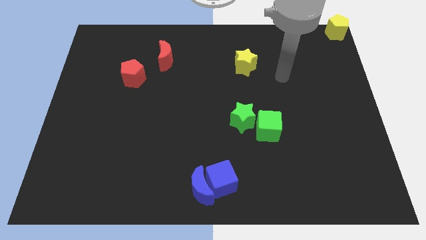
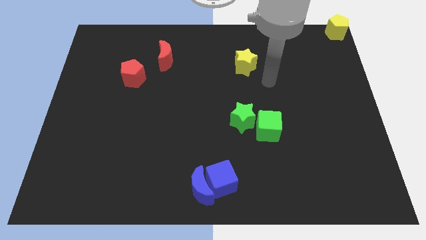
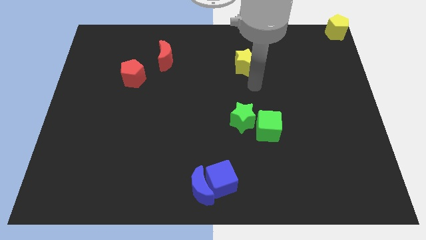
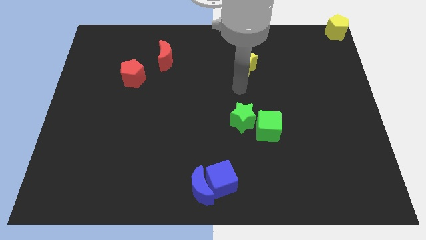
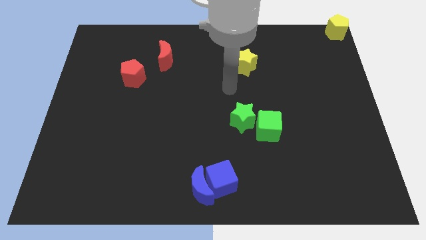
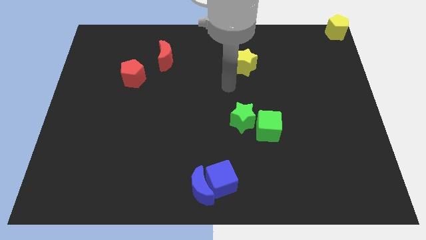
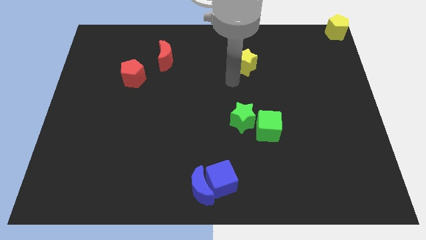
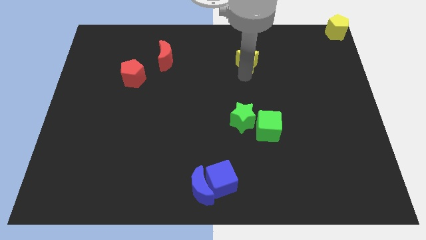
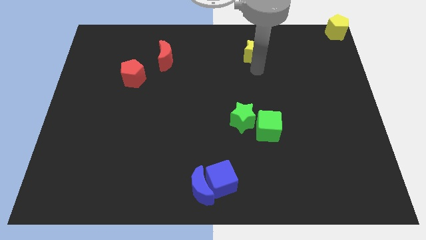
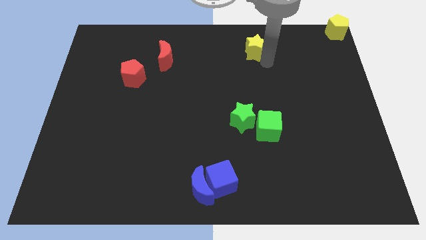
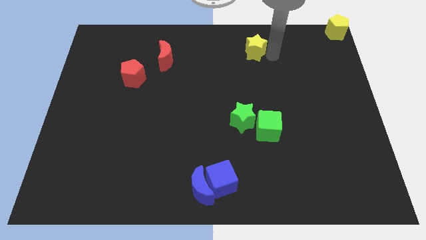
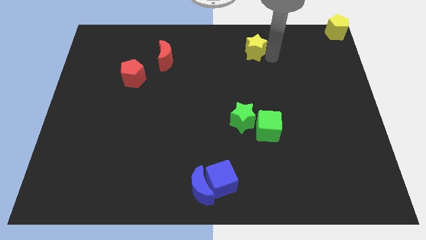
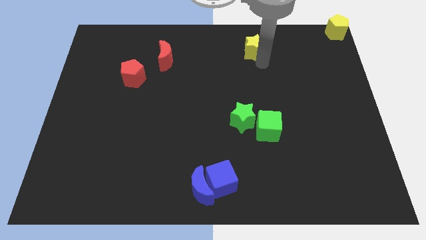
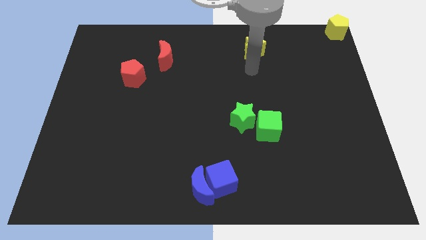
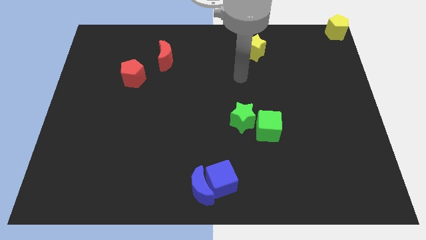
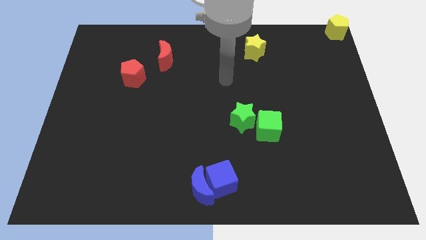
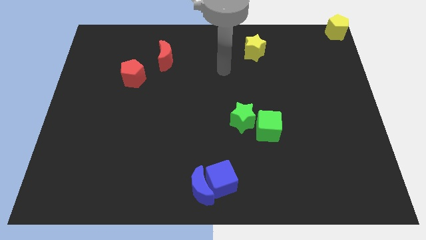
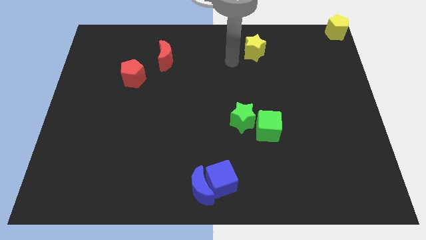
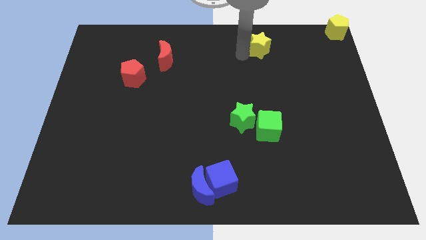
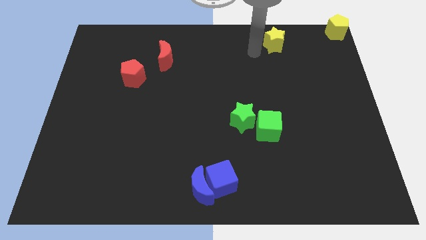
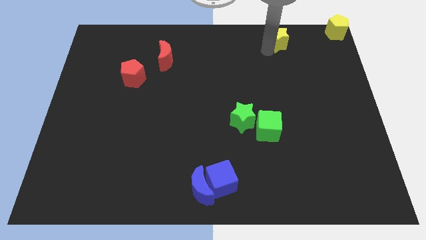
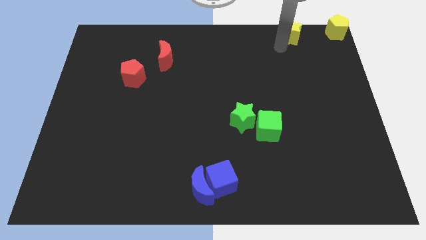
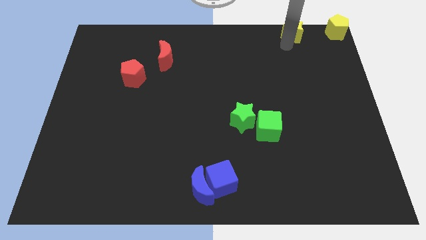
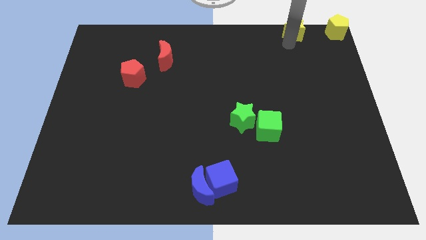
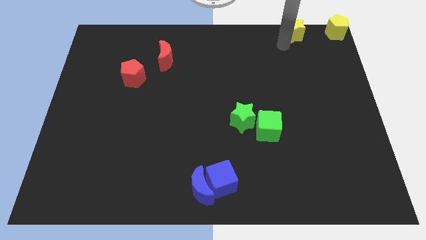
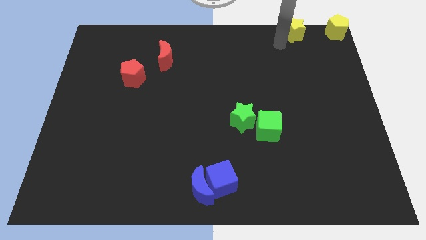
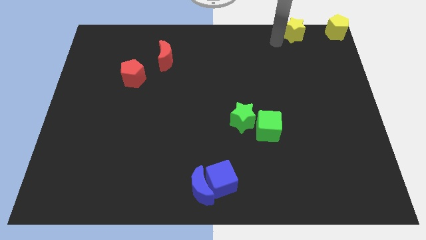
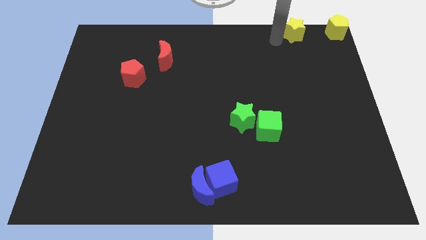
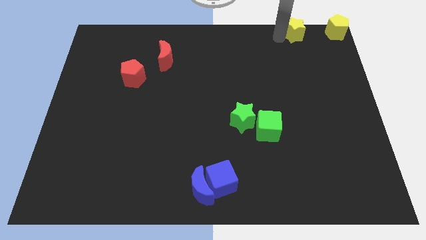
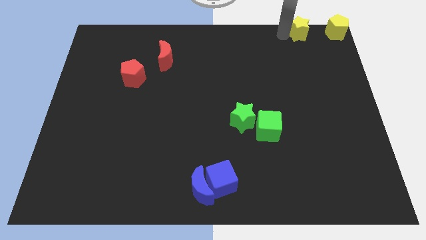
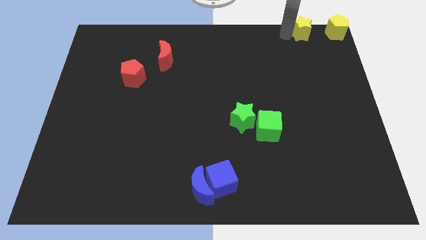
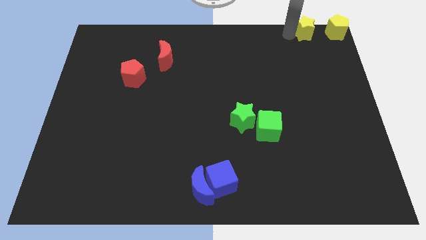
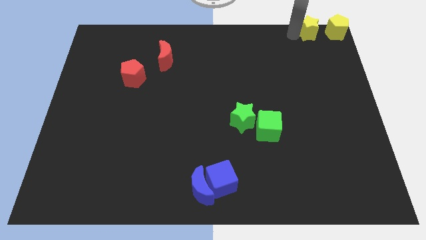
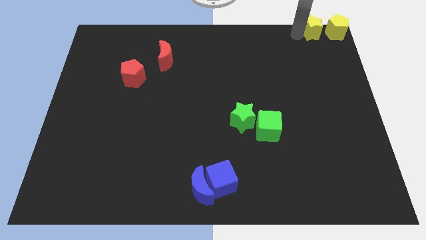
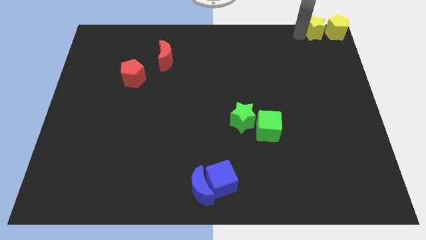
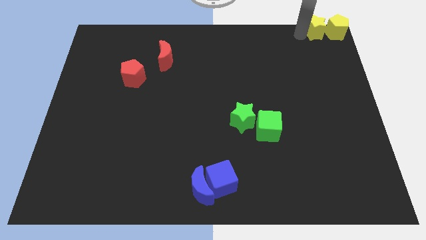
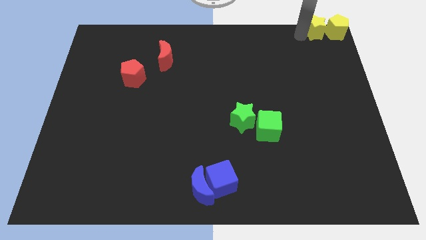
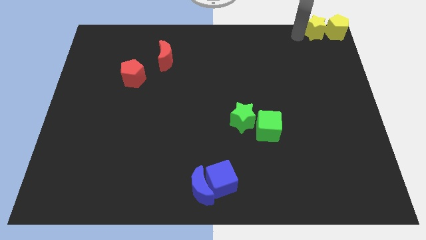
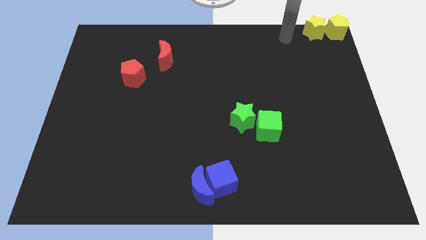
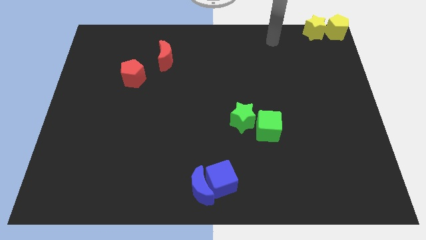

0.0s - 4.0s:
place the yellow star to the left of the yellow pentagon

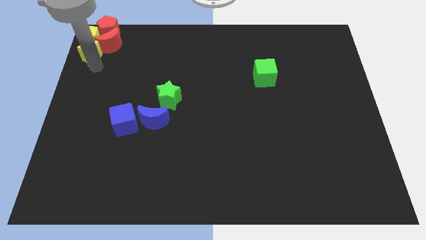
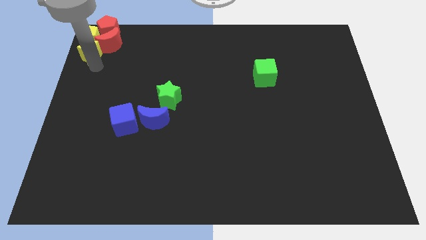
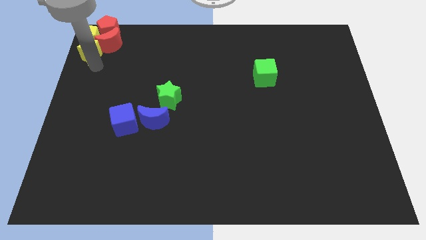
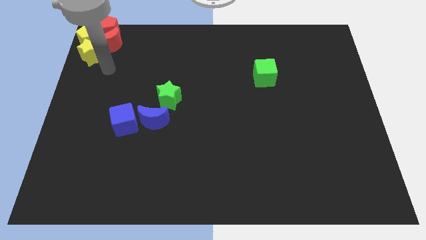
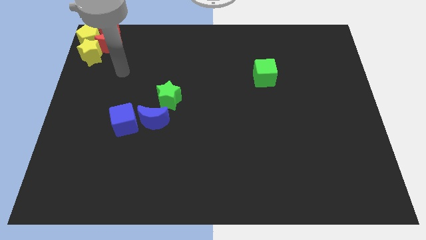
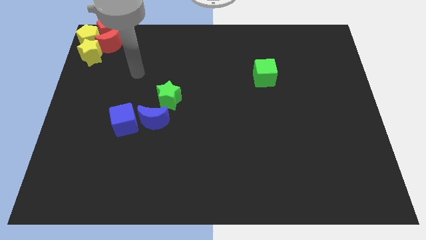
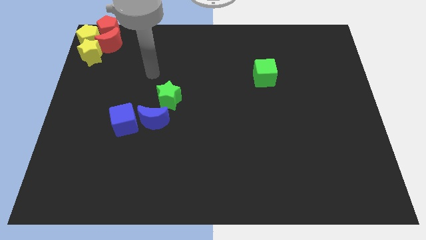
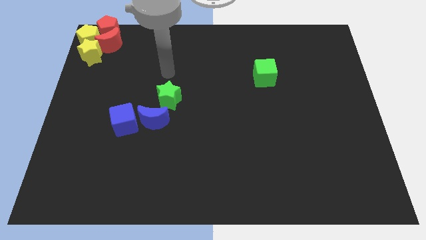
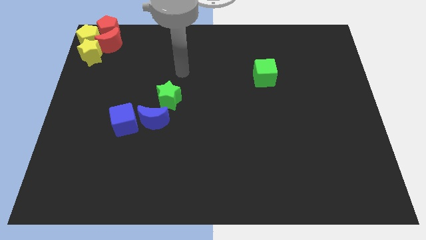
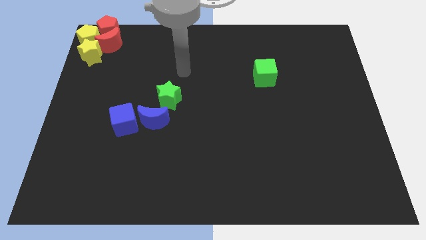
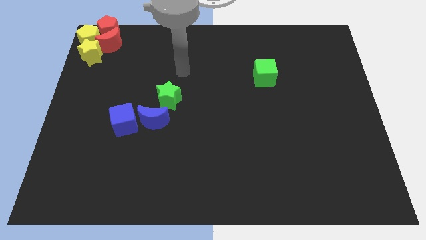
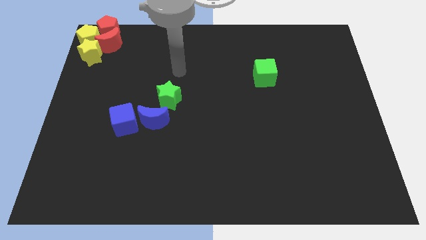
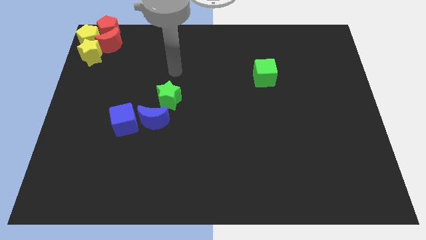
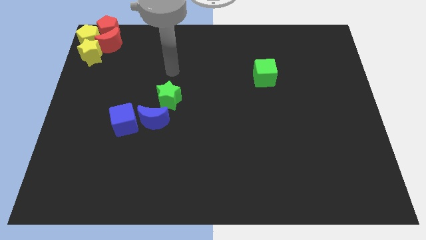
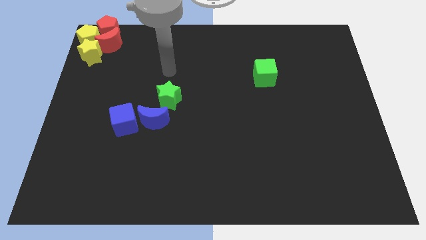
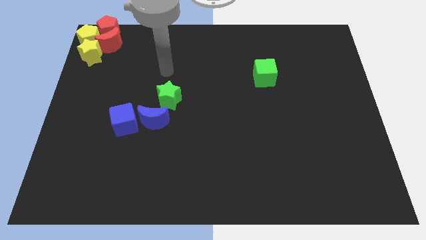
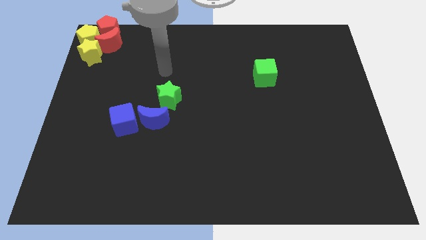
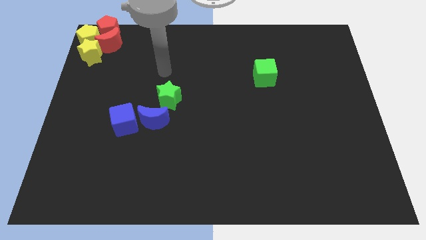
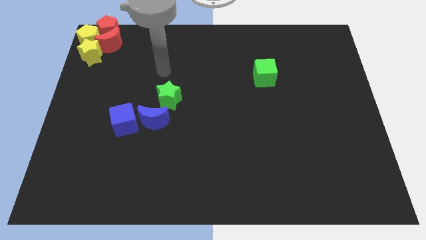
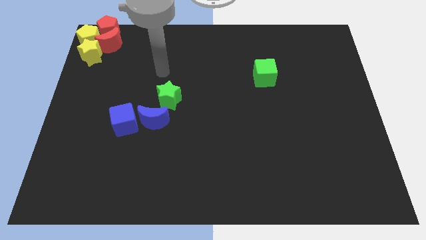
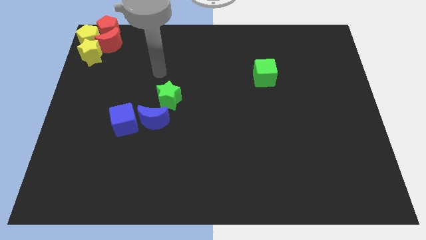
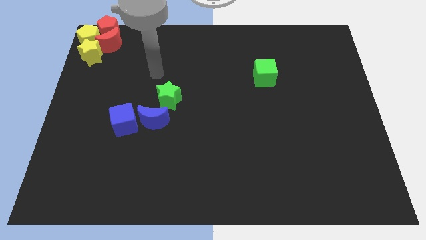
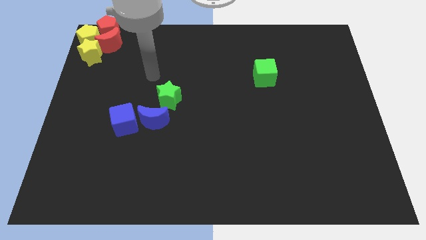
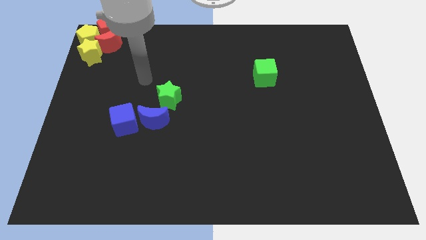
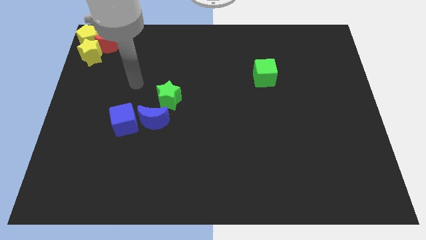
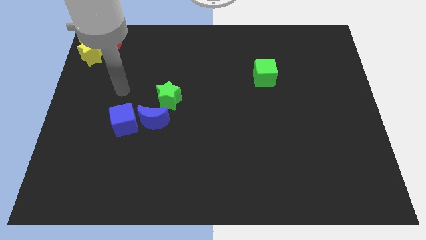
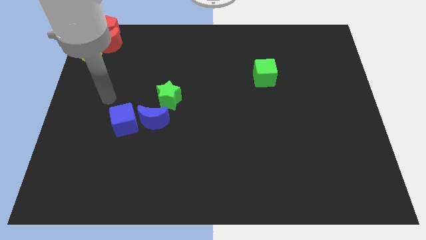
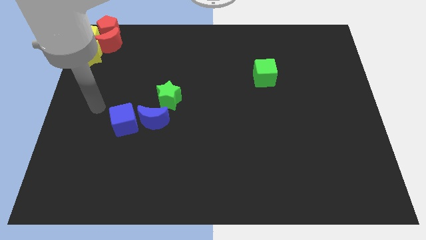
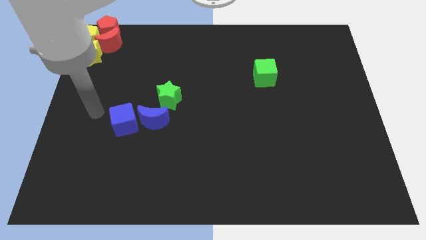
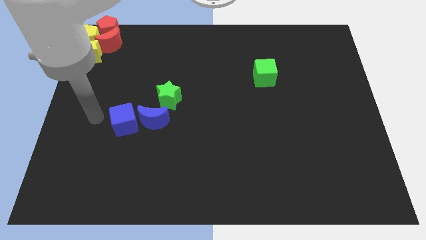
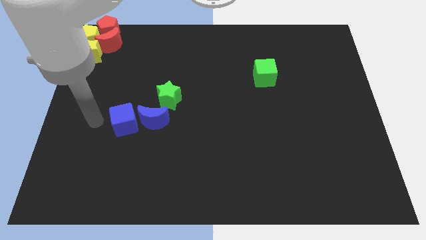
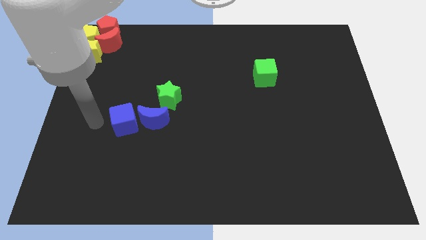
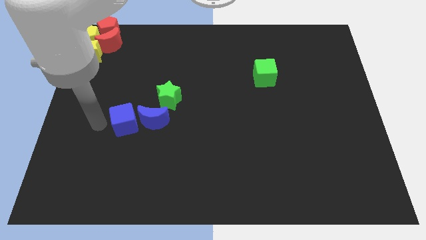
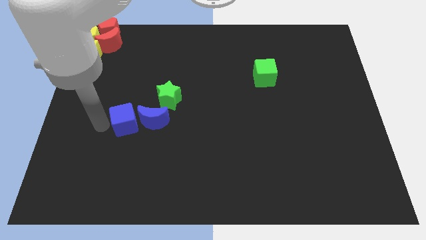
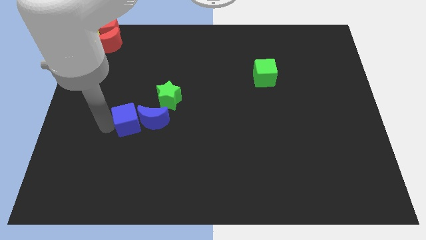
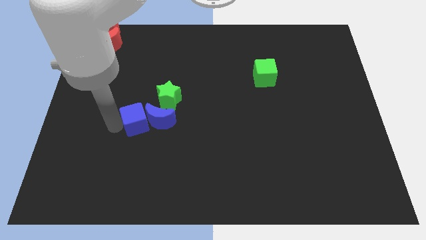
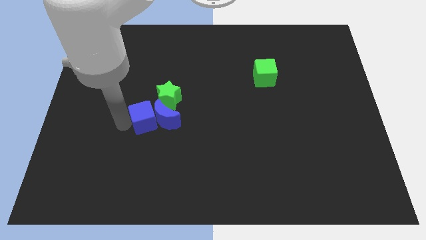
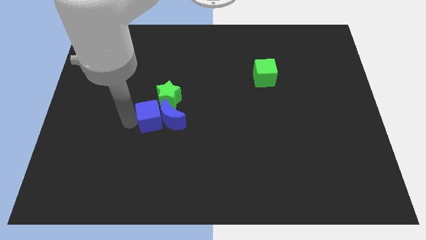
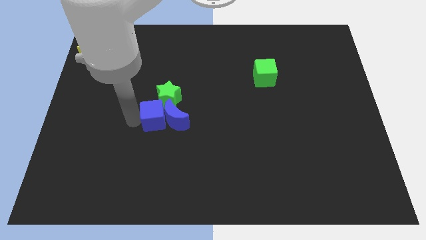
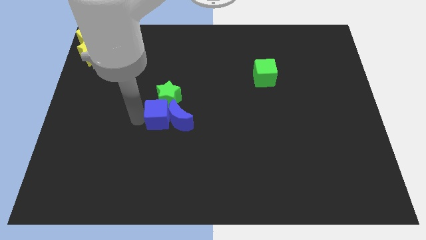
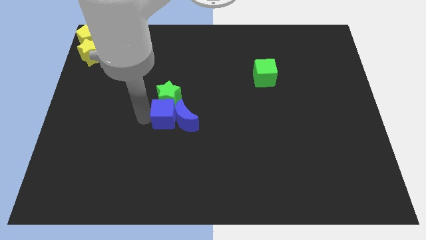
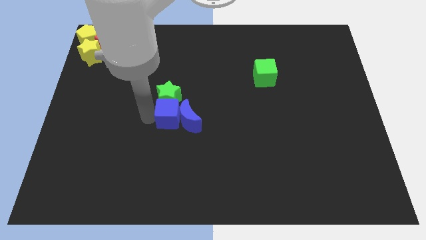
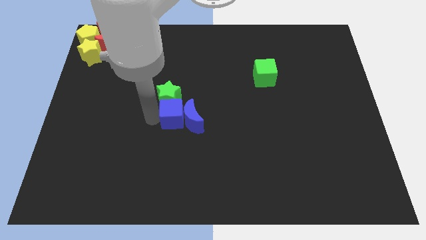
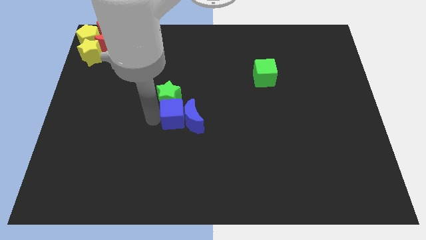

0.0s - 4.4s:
place blue cube to the bottom of green star

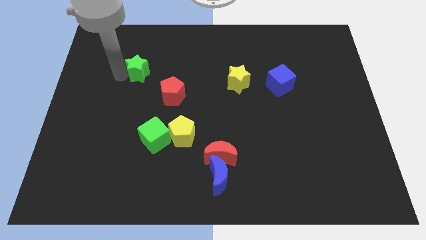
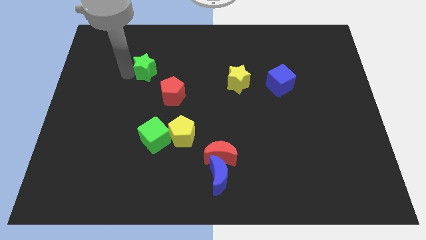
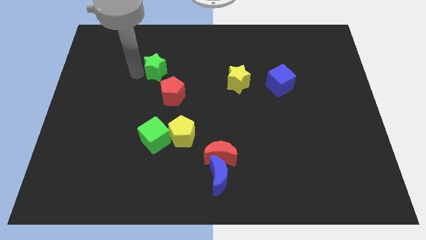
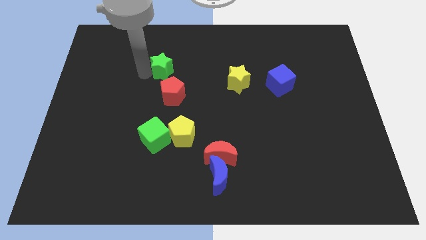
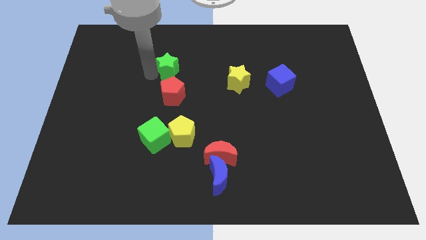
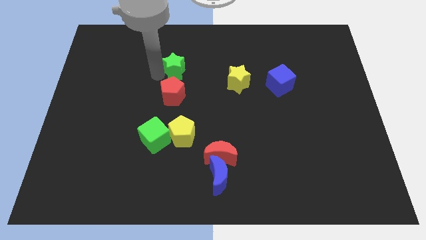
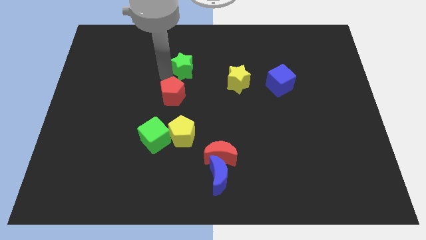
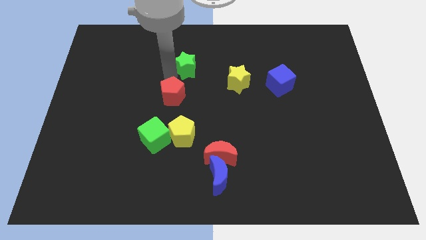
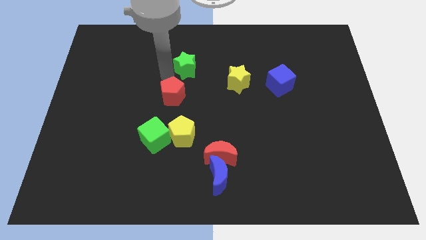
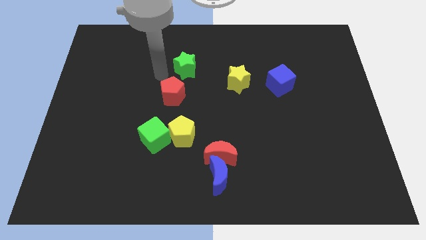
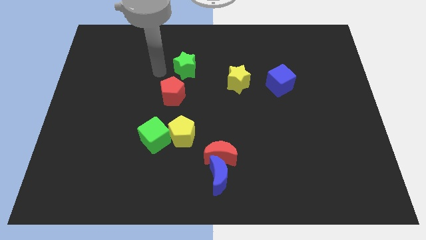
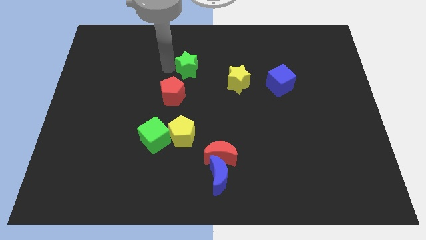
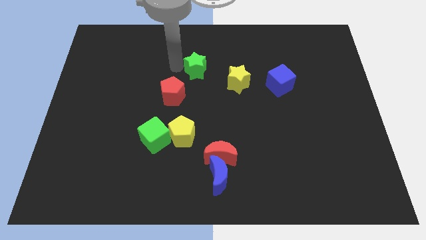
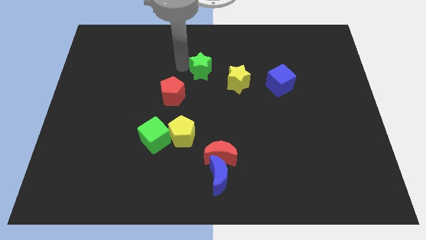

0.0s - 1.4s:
move the green star diagonally to the top right of the red pentagon
